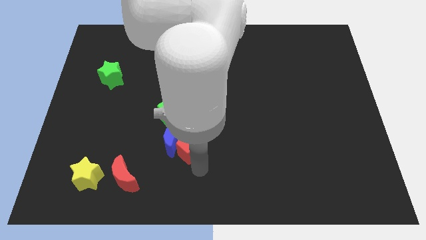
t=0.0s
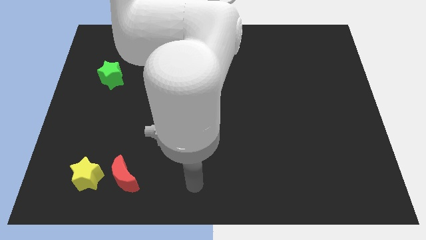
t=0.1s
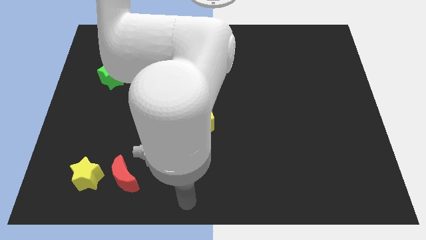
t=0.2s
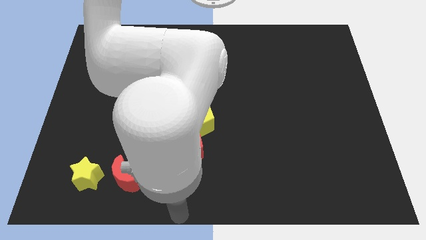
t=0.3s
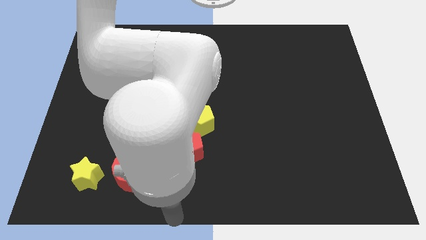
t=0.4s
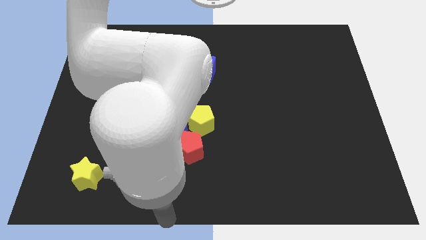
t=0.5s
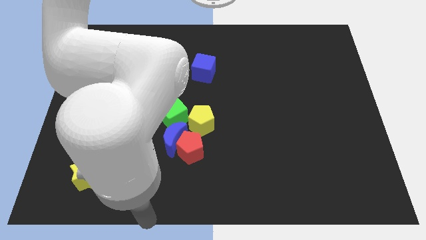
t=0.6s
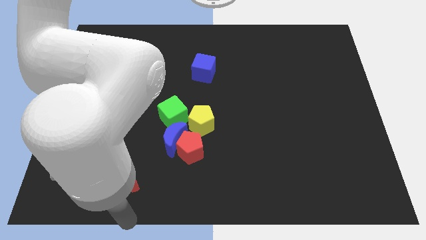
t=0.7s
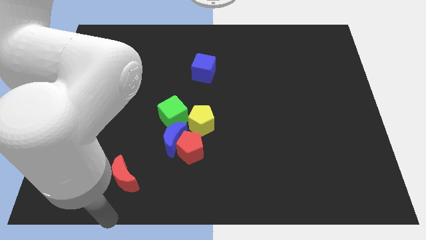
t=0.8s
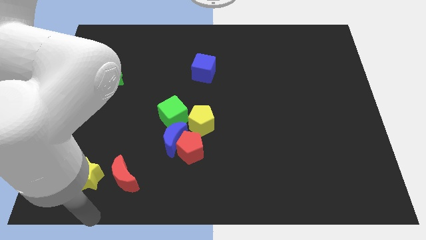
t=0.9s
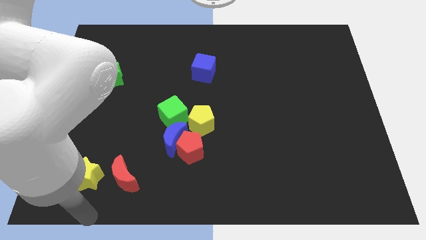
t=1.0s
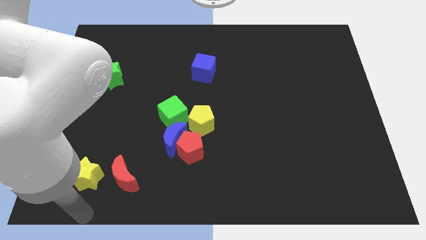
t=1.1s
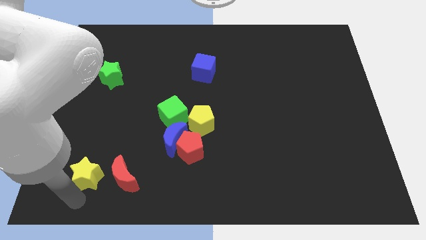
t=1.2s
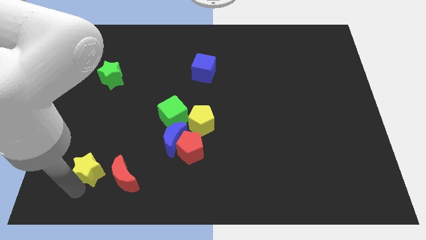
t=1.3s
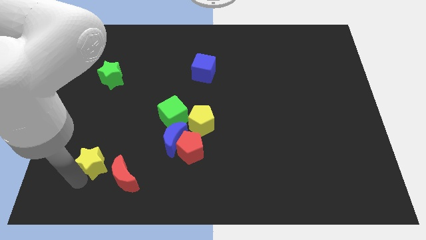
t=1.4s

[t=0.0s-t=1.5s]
touch the bottom of the yellow star

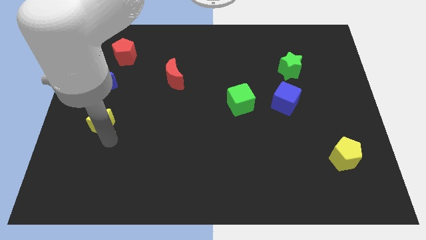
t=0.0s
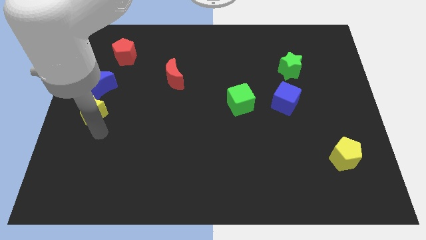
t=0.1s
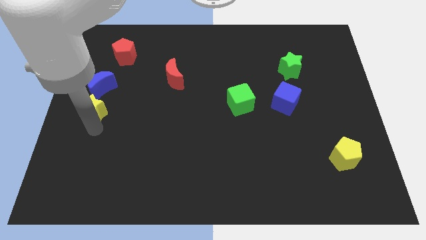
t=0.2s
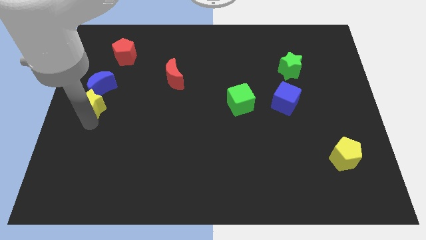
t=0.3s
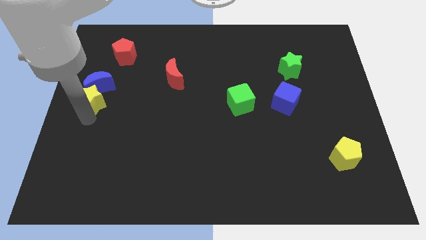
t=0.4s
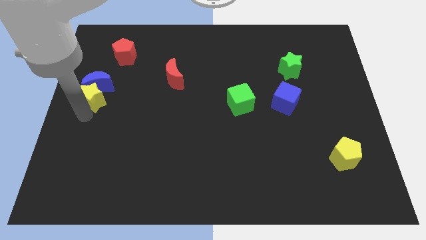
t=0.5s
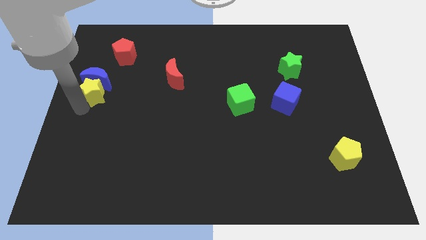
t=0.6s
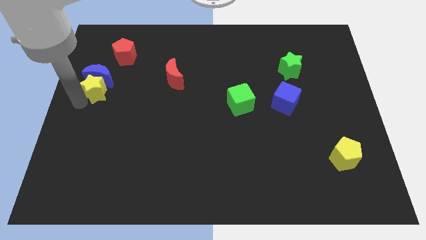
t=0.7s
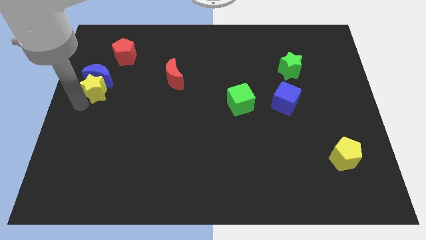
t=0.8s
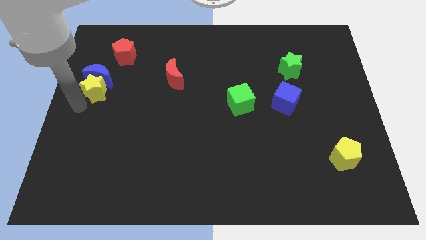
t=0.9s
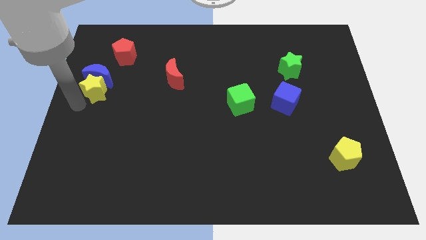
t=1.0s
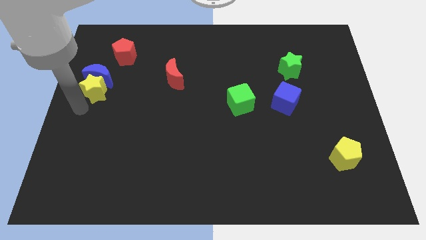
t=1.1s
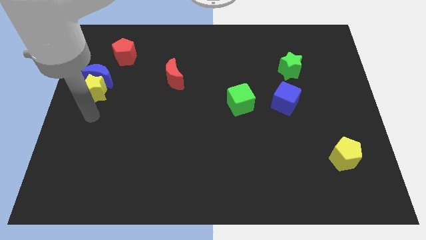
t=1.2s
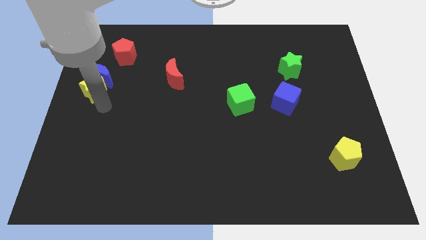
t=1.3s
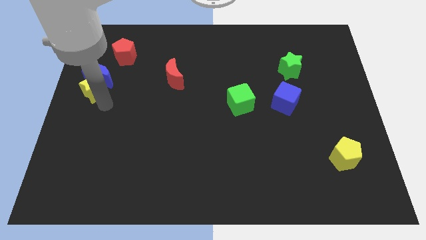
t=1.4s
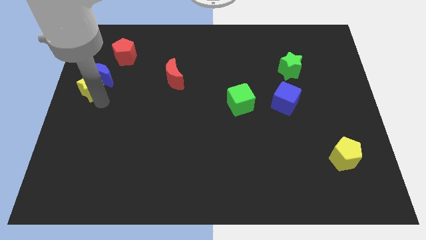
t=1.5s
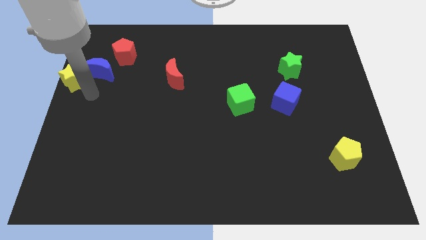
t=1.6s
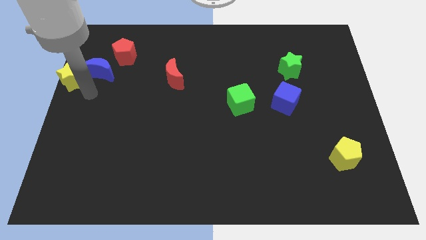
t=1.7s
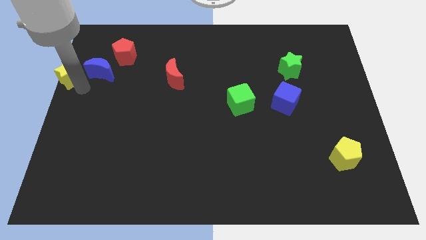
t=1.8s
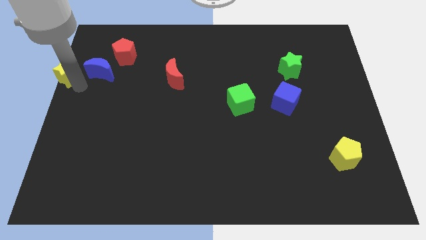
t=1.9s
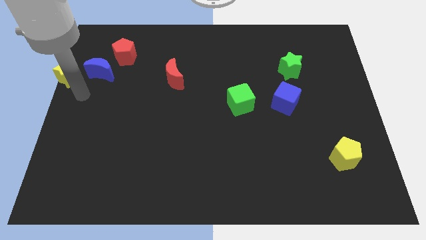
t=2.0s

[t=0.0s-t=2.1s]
move the yellow star to the center left

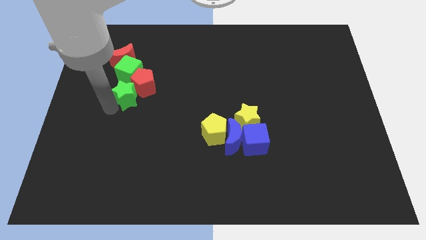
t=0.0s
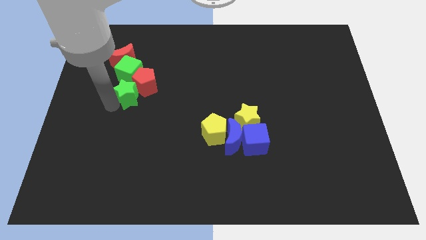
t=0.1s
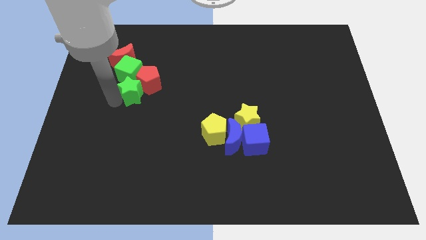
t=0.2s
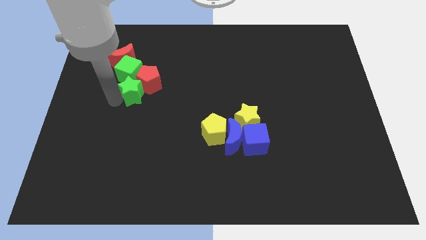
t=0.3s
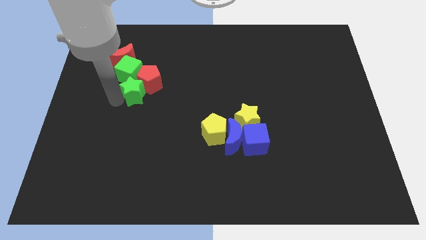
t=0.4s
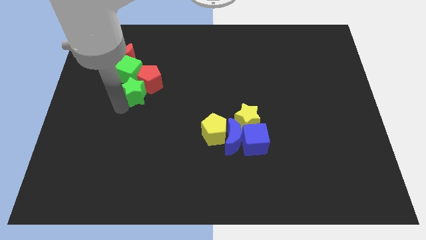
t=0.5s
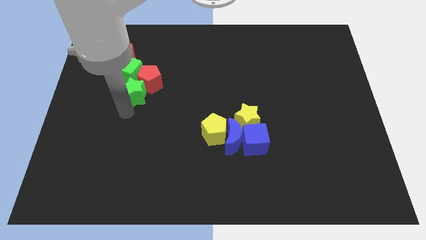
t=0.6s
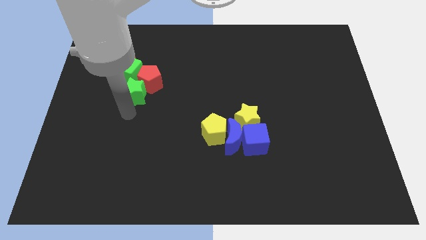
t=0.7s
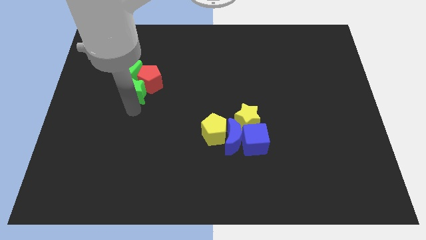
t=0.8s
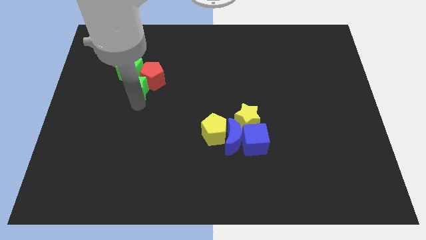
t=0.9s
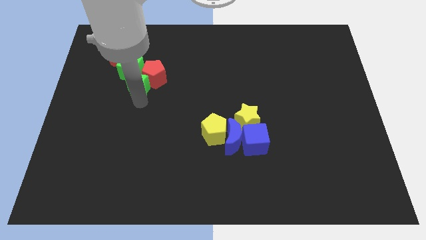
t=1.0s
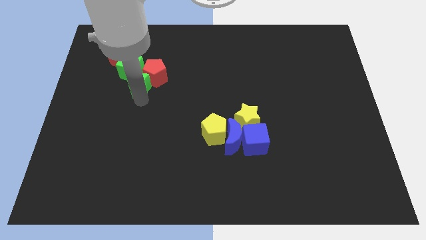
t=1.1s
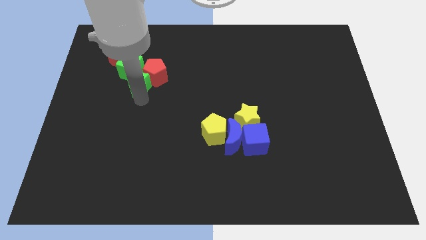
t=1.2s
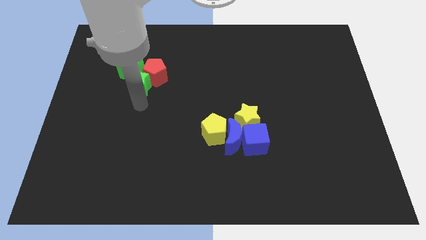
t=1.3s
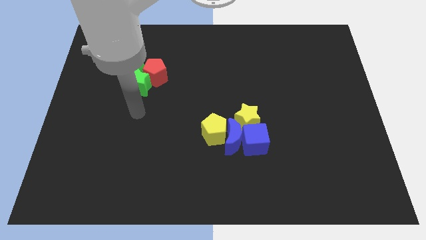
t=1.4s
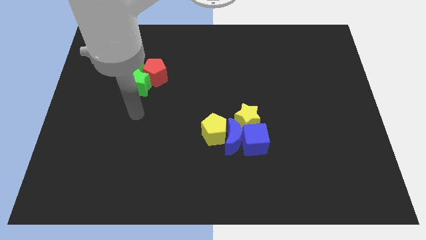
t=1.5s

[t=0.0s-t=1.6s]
push the green star into the red pentagon

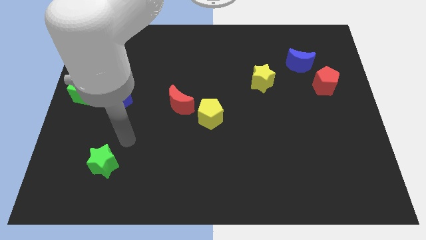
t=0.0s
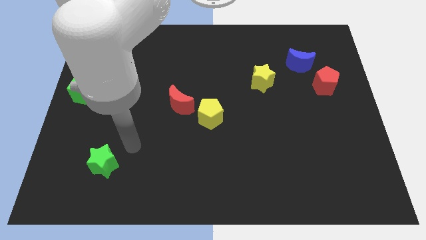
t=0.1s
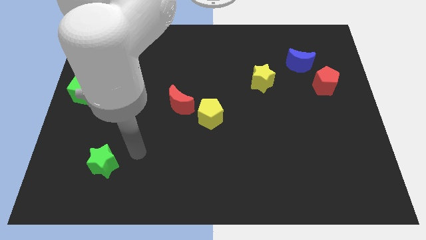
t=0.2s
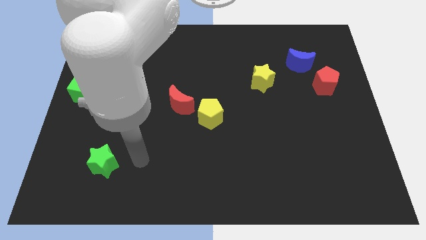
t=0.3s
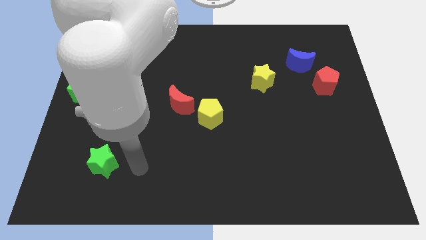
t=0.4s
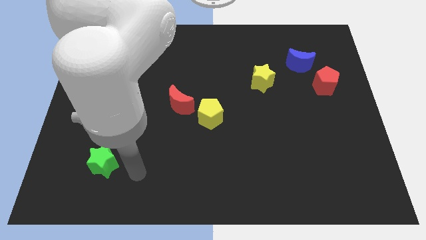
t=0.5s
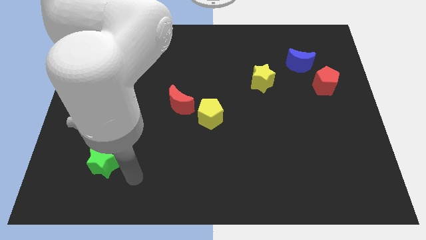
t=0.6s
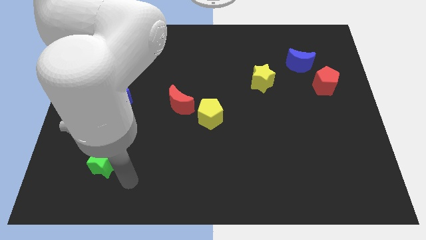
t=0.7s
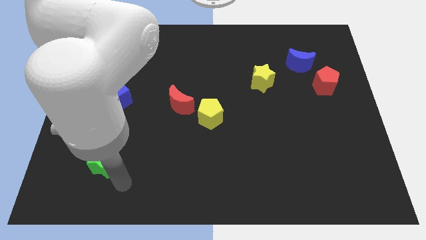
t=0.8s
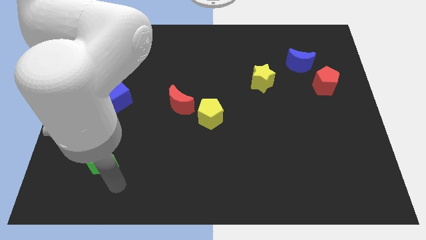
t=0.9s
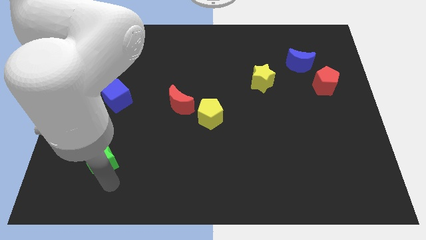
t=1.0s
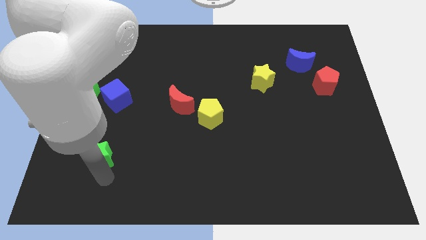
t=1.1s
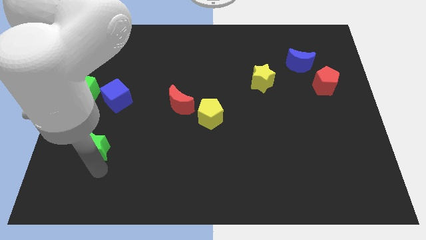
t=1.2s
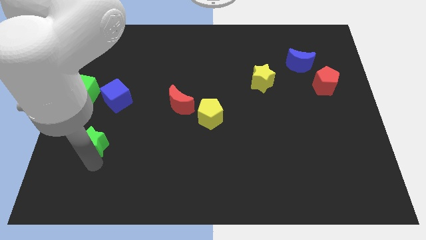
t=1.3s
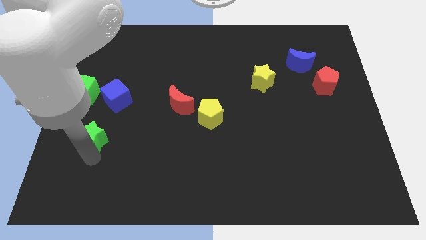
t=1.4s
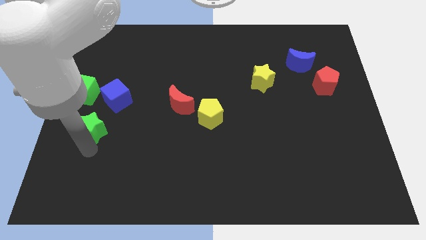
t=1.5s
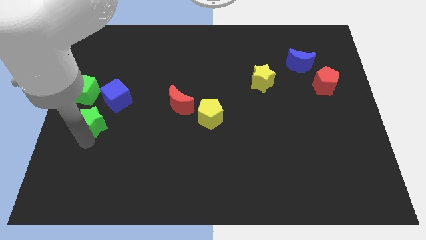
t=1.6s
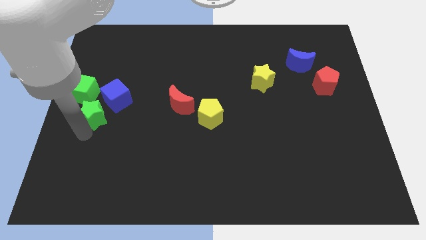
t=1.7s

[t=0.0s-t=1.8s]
push the green star towards the green cube

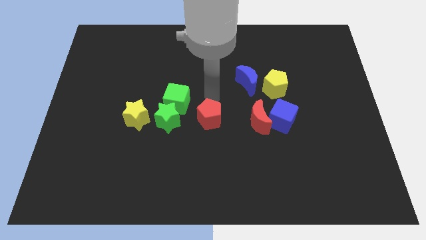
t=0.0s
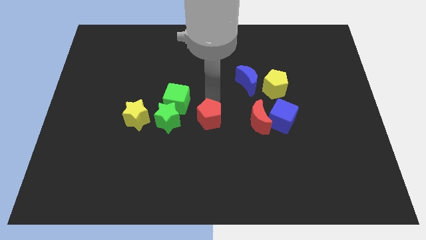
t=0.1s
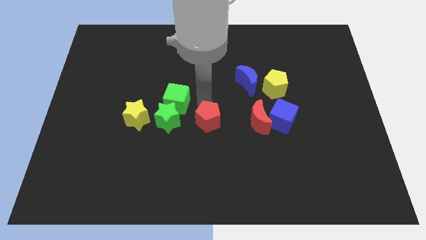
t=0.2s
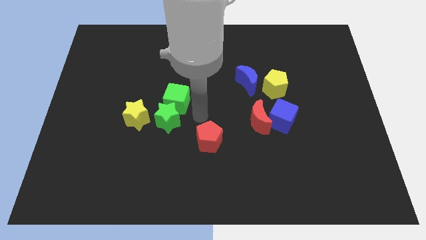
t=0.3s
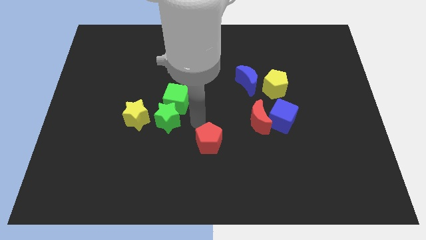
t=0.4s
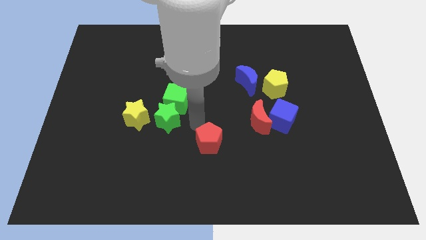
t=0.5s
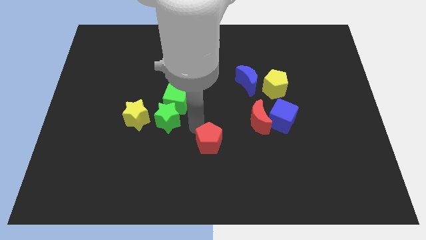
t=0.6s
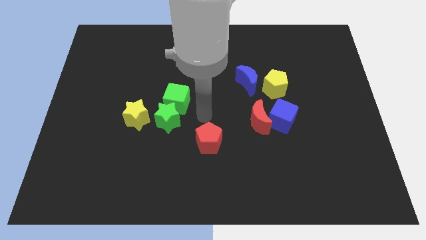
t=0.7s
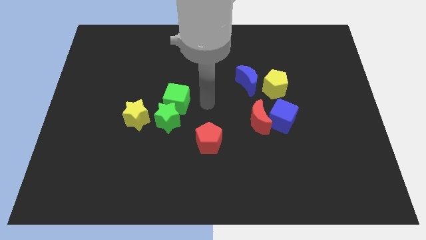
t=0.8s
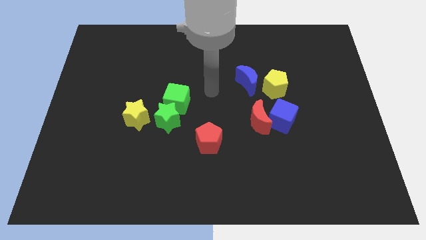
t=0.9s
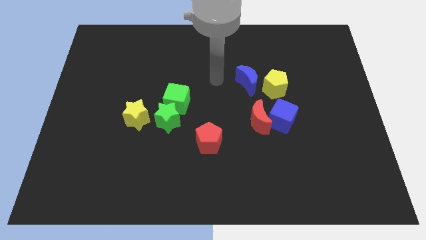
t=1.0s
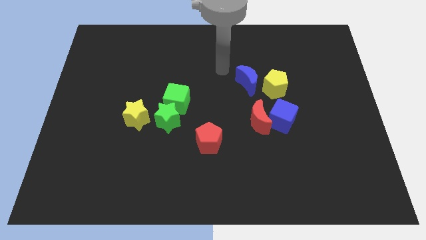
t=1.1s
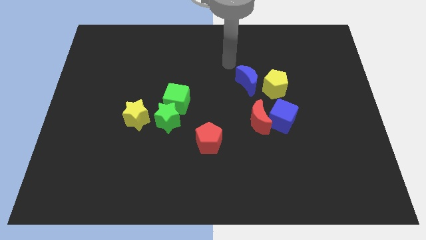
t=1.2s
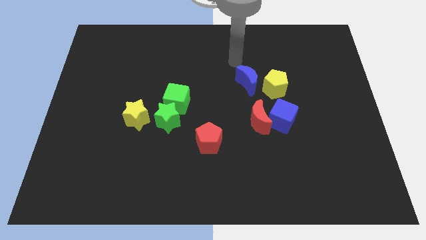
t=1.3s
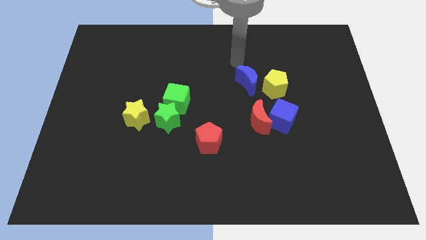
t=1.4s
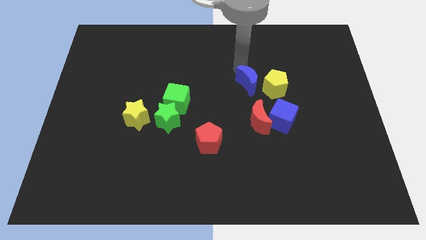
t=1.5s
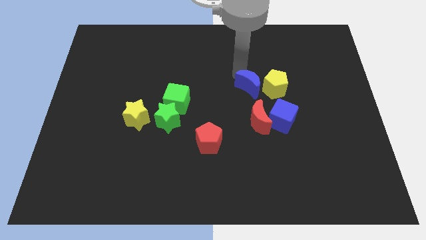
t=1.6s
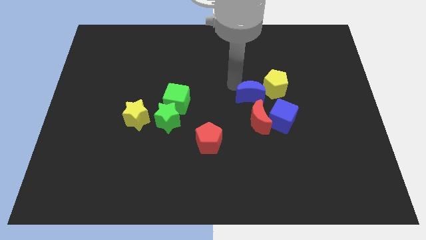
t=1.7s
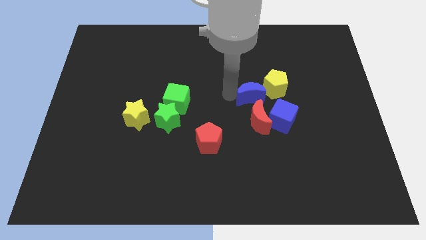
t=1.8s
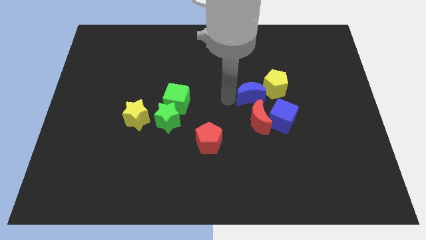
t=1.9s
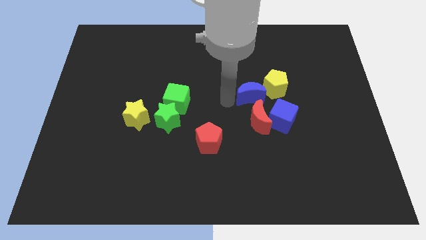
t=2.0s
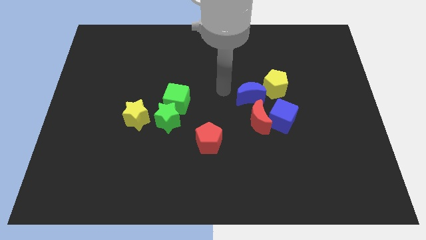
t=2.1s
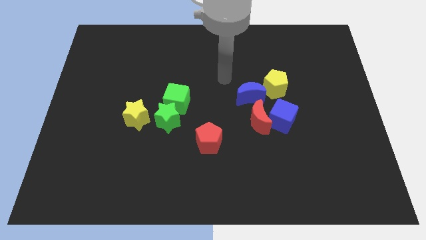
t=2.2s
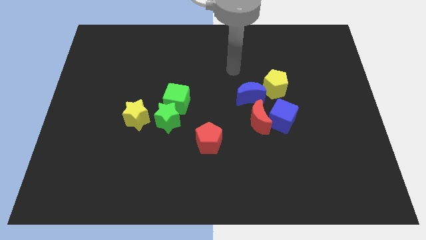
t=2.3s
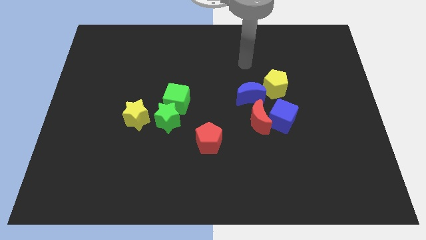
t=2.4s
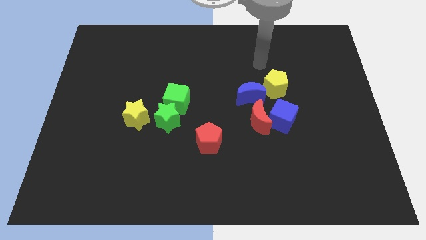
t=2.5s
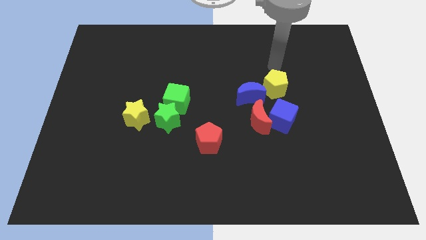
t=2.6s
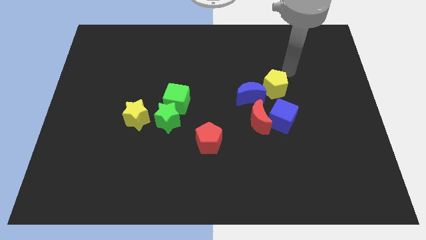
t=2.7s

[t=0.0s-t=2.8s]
push the red pentagon downward
